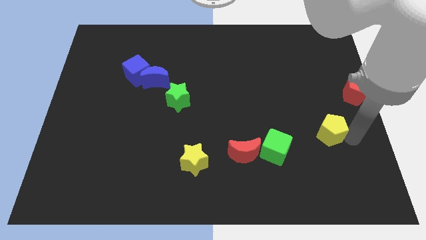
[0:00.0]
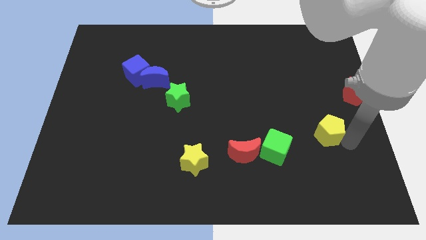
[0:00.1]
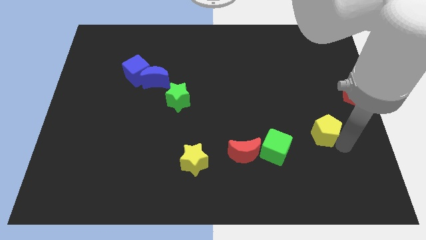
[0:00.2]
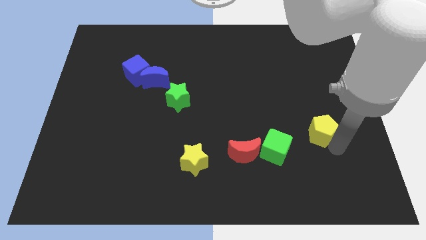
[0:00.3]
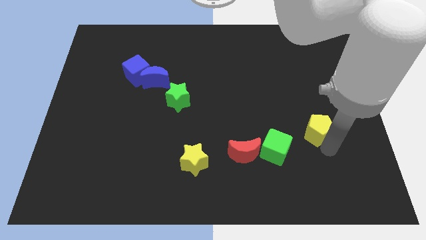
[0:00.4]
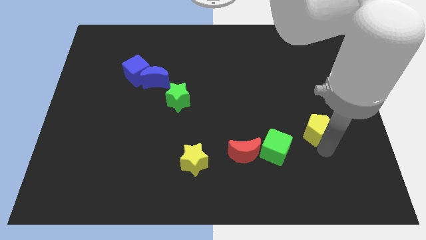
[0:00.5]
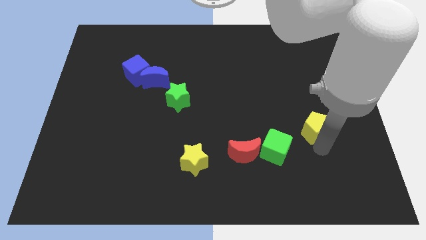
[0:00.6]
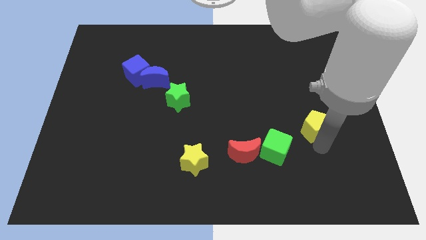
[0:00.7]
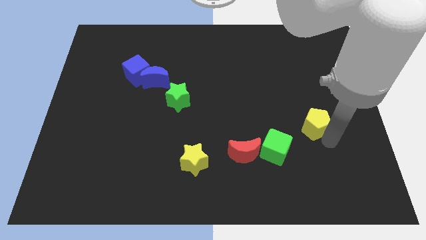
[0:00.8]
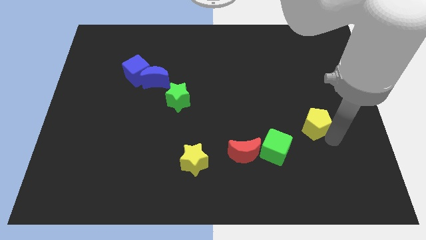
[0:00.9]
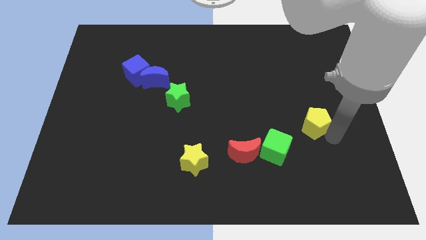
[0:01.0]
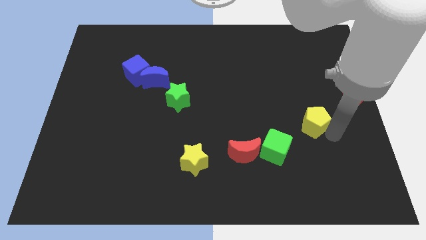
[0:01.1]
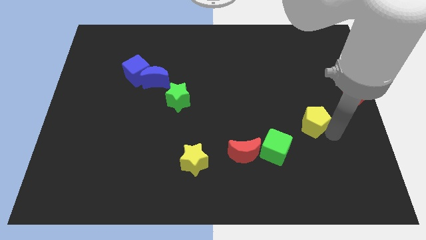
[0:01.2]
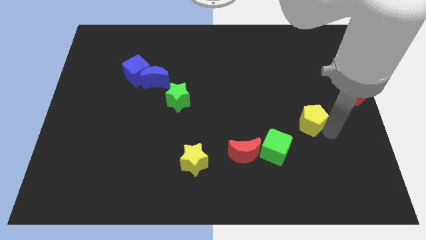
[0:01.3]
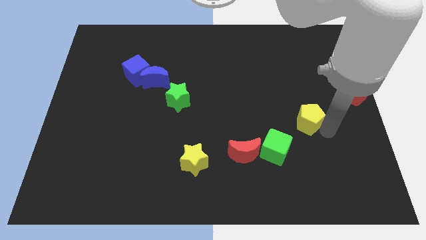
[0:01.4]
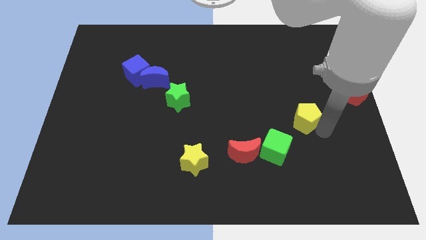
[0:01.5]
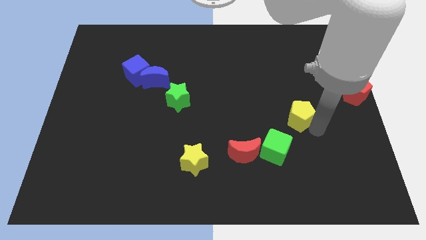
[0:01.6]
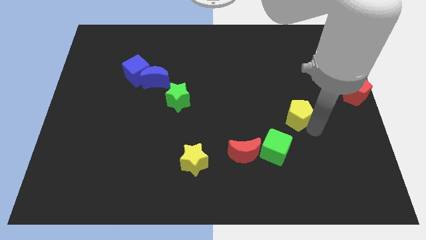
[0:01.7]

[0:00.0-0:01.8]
push the yellow pentagon to the top right of the green cube

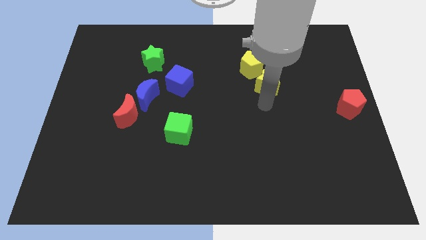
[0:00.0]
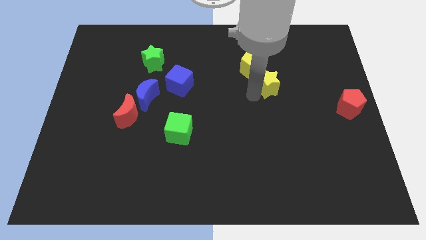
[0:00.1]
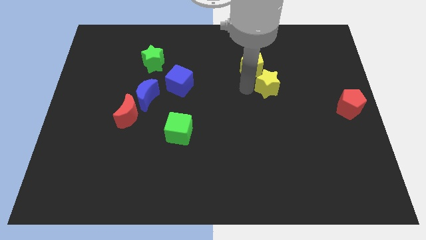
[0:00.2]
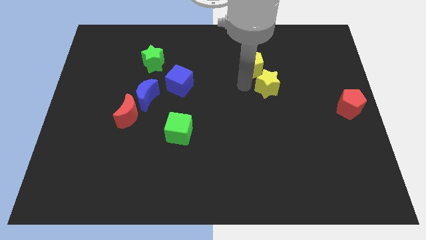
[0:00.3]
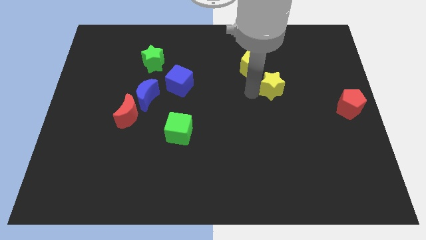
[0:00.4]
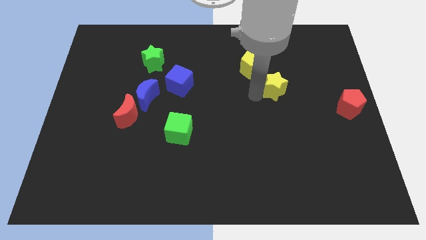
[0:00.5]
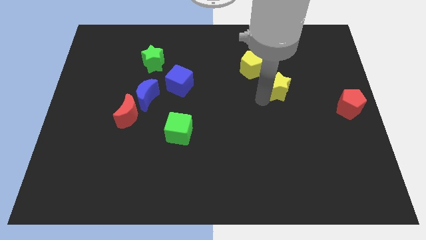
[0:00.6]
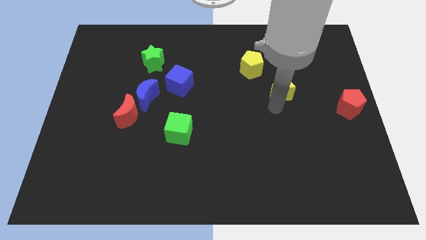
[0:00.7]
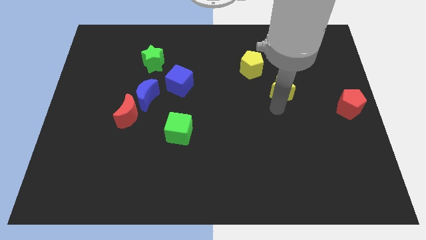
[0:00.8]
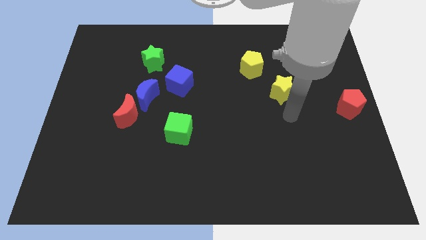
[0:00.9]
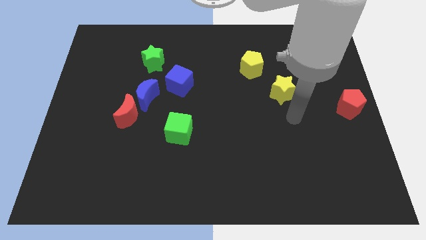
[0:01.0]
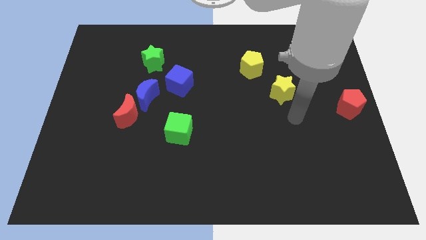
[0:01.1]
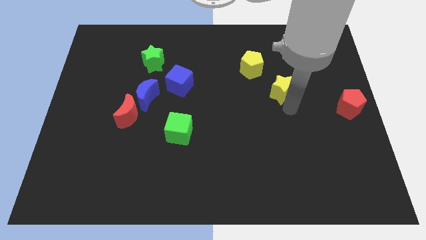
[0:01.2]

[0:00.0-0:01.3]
move the yellow star away from the yellow pentagon

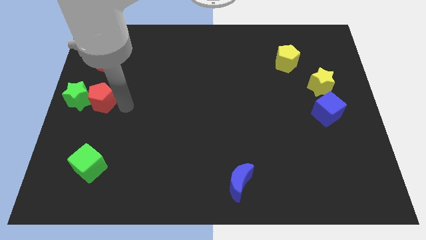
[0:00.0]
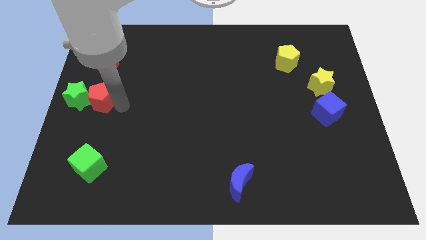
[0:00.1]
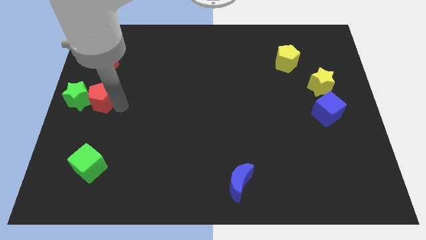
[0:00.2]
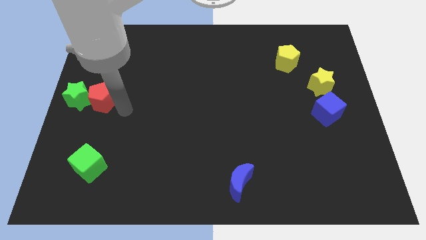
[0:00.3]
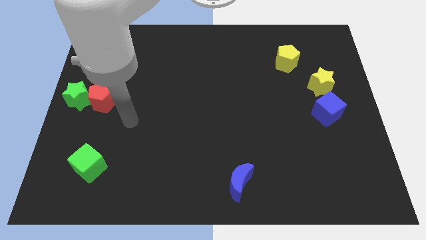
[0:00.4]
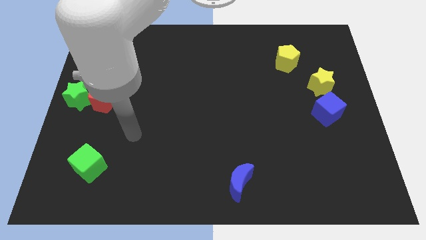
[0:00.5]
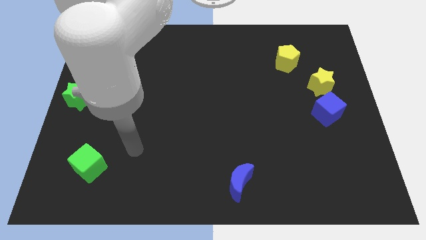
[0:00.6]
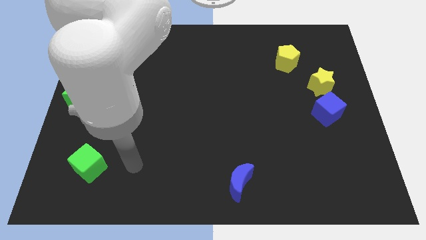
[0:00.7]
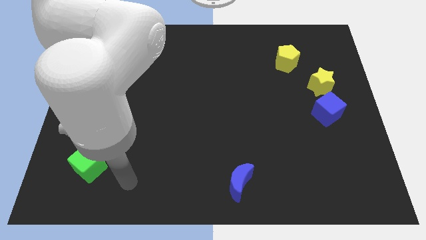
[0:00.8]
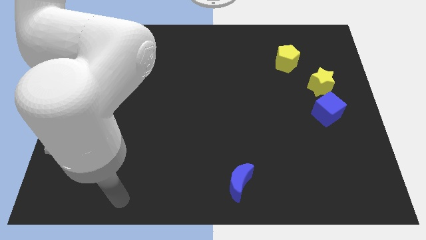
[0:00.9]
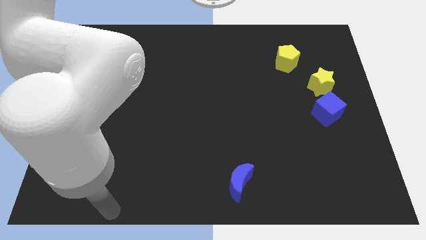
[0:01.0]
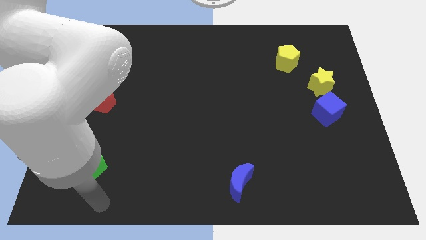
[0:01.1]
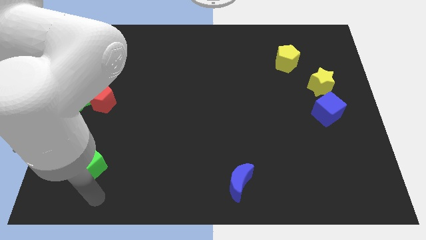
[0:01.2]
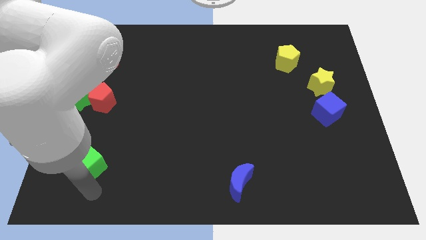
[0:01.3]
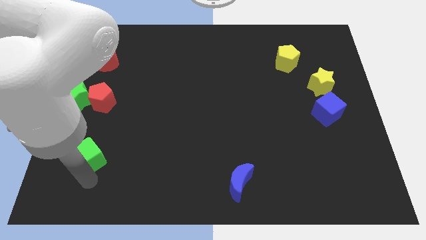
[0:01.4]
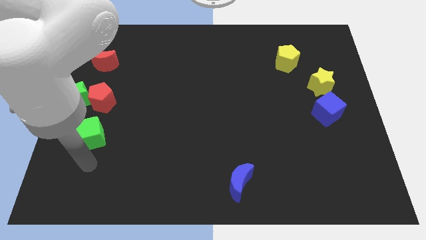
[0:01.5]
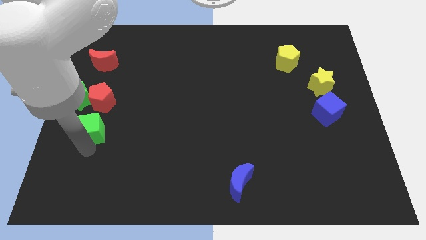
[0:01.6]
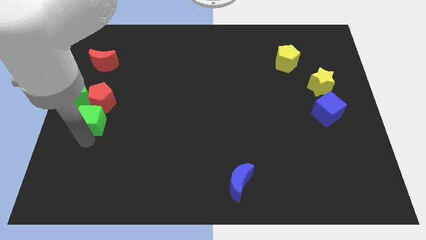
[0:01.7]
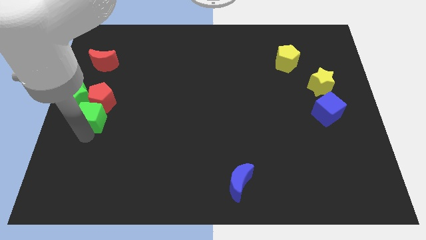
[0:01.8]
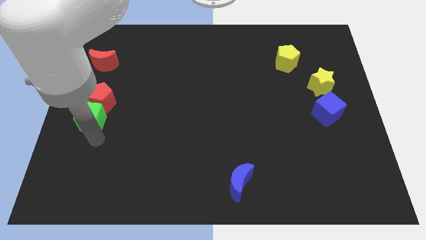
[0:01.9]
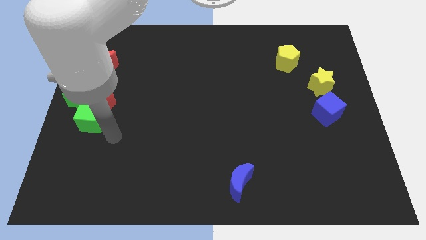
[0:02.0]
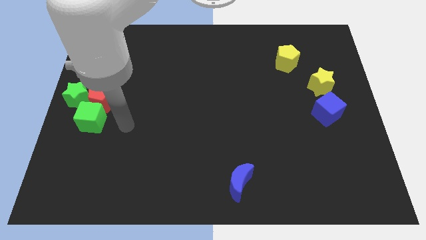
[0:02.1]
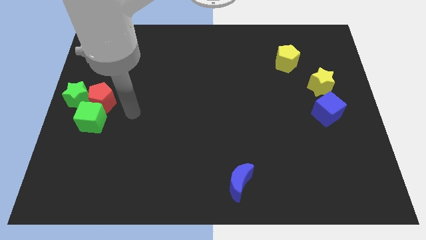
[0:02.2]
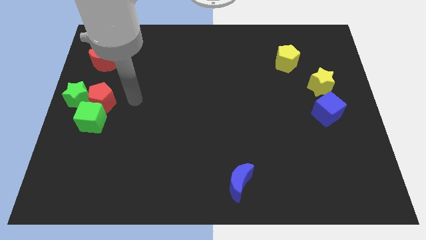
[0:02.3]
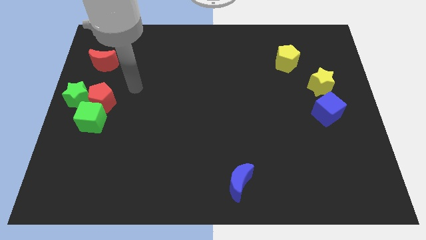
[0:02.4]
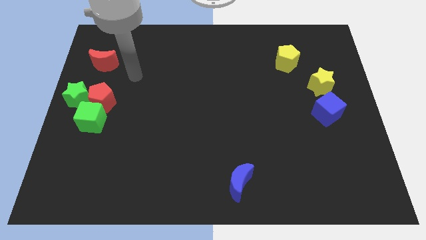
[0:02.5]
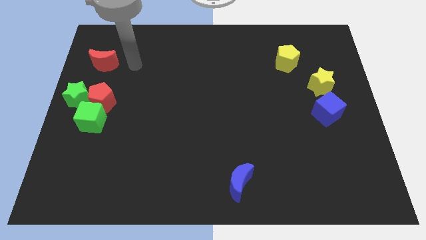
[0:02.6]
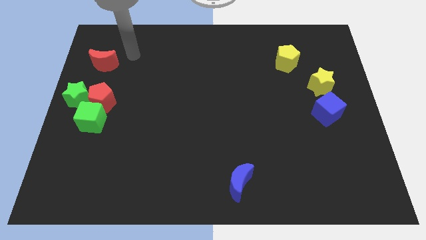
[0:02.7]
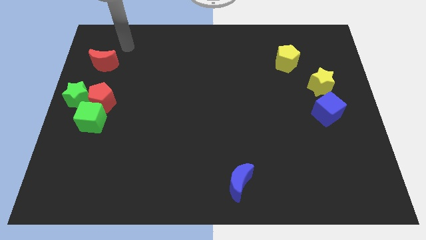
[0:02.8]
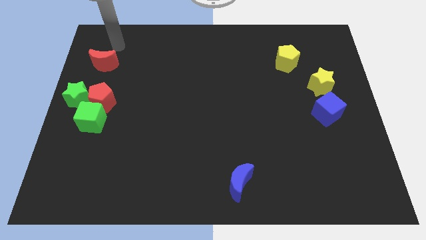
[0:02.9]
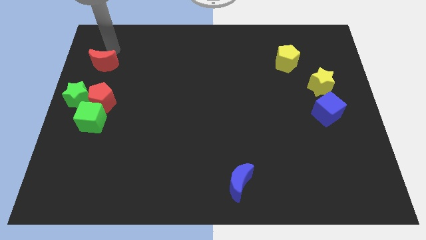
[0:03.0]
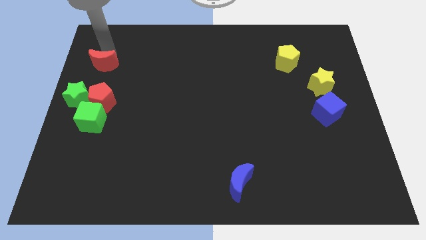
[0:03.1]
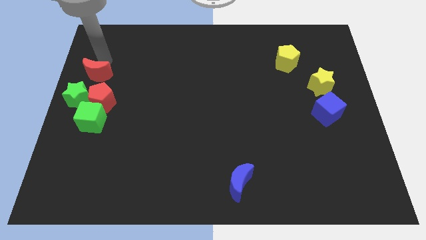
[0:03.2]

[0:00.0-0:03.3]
push the green cube to the bottom of the red pentagon

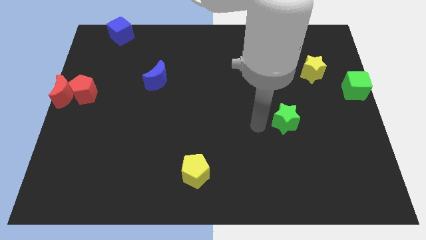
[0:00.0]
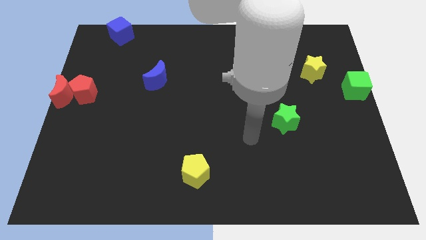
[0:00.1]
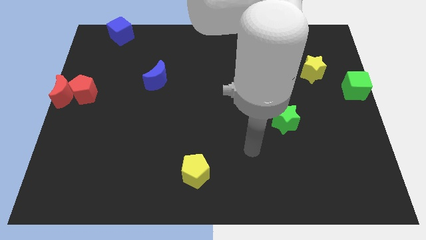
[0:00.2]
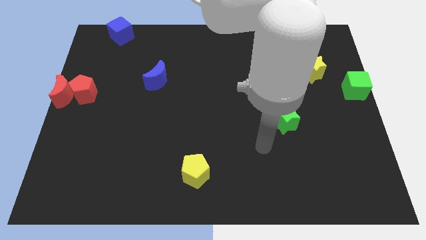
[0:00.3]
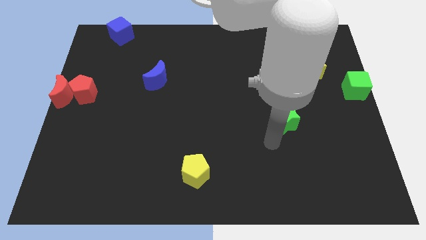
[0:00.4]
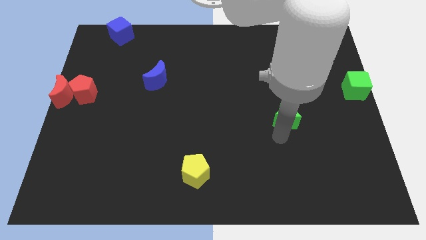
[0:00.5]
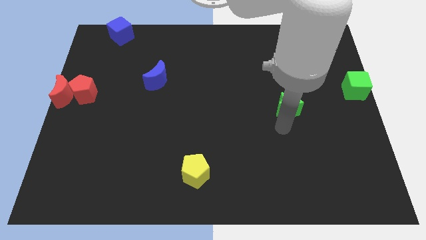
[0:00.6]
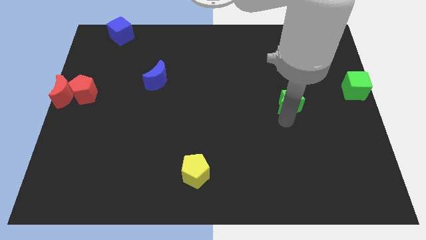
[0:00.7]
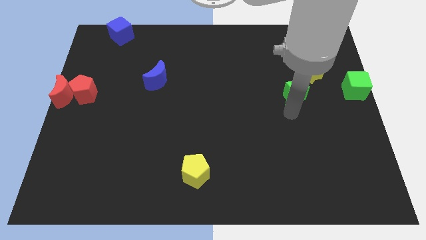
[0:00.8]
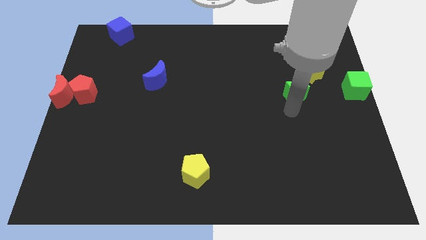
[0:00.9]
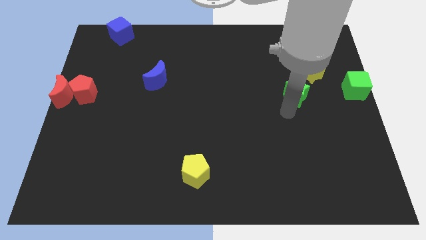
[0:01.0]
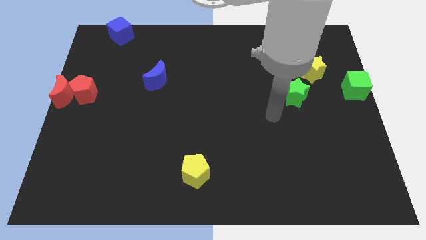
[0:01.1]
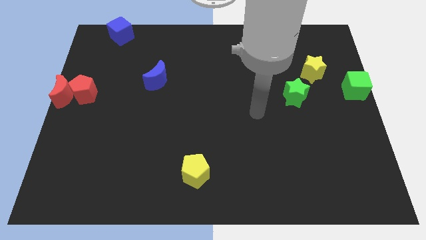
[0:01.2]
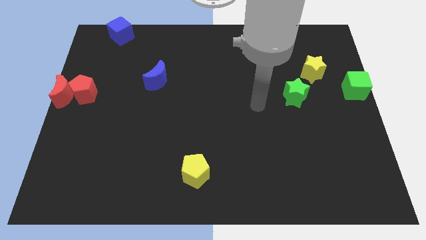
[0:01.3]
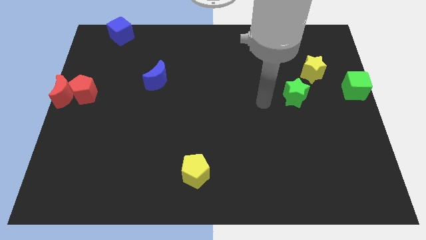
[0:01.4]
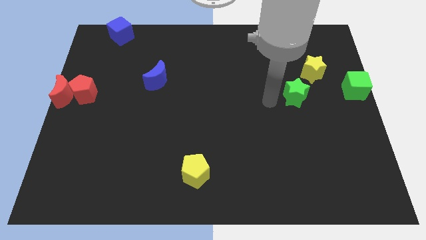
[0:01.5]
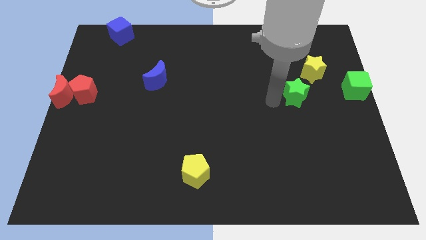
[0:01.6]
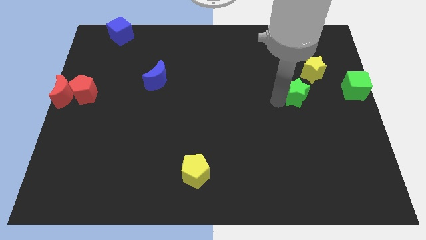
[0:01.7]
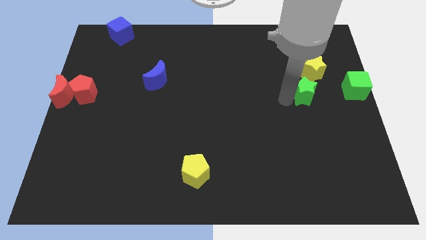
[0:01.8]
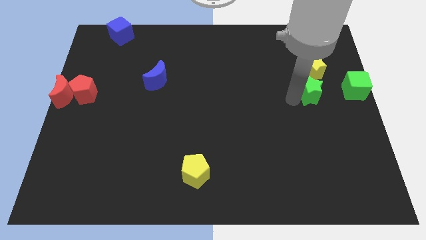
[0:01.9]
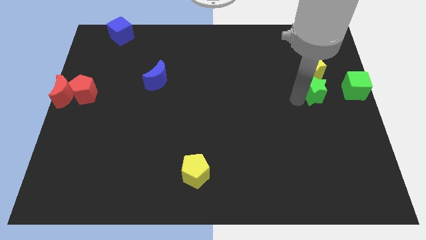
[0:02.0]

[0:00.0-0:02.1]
place the green star left to the green cube

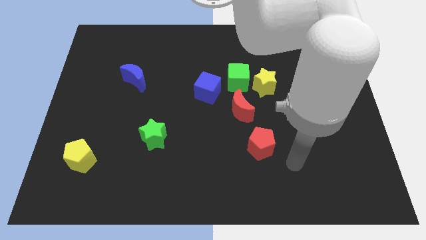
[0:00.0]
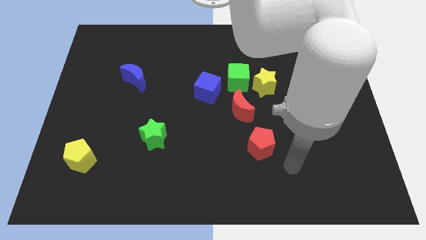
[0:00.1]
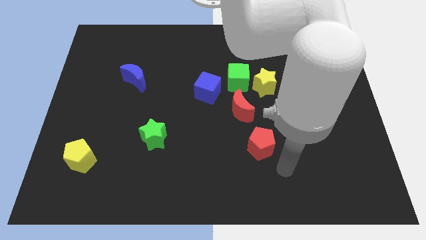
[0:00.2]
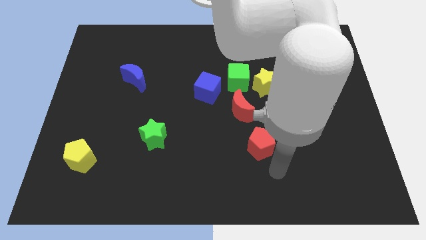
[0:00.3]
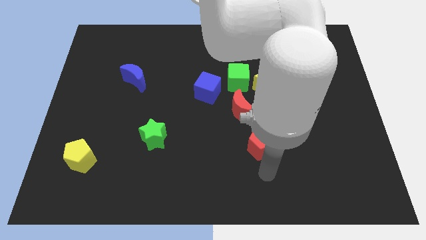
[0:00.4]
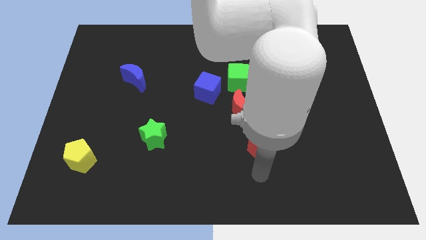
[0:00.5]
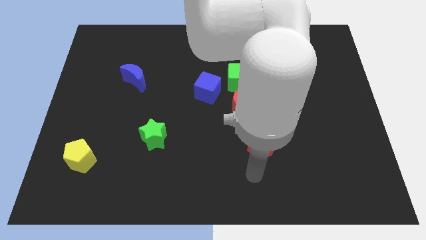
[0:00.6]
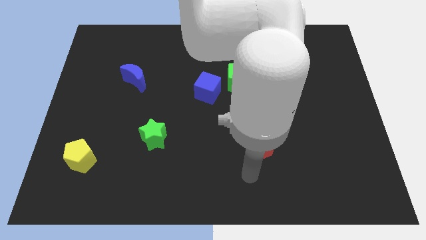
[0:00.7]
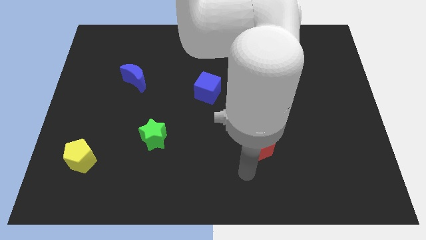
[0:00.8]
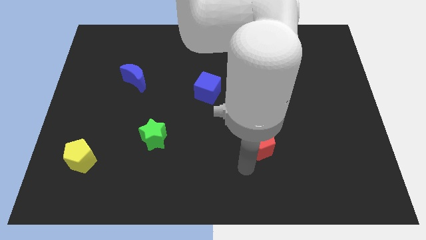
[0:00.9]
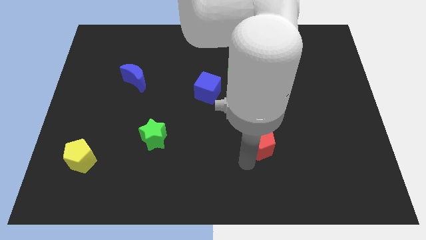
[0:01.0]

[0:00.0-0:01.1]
move your arm towards the red pentagon
